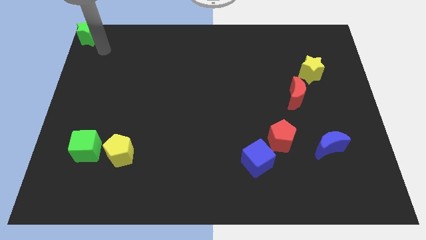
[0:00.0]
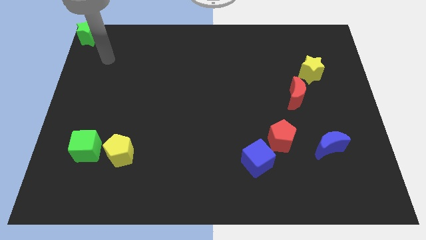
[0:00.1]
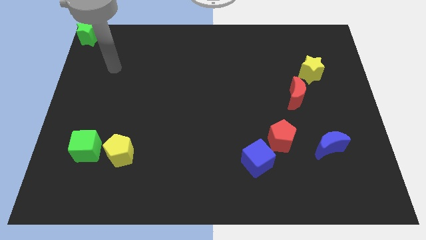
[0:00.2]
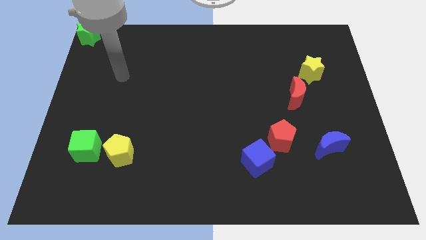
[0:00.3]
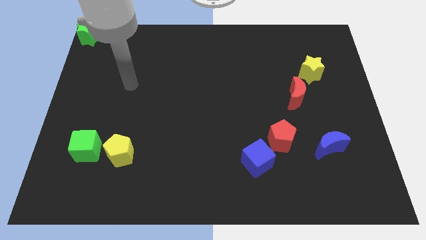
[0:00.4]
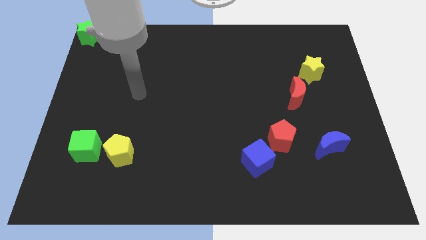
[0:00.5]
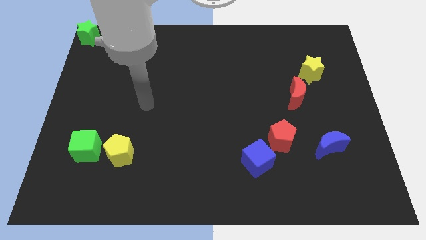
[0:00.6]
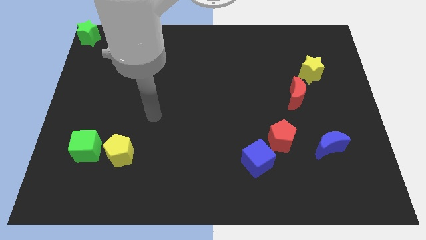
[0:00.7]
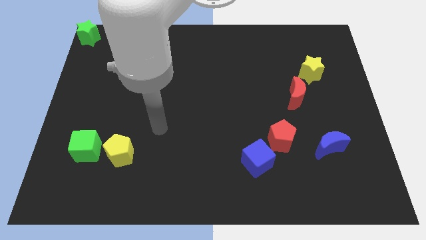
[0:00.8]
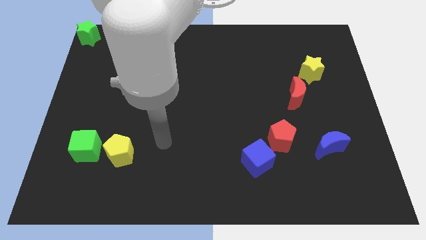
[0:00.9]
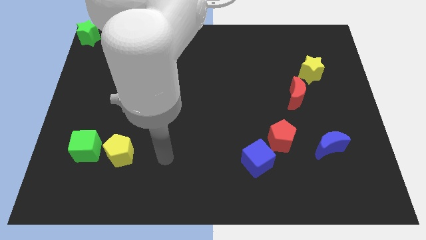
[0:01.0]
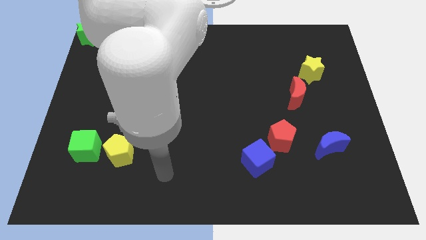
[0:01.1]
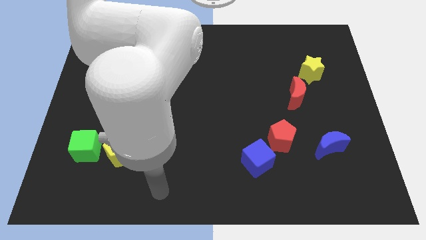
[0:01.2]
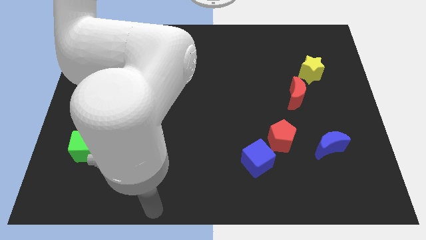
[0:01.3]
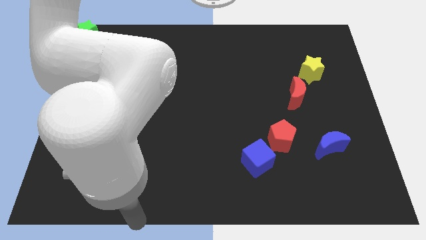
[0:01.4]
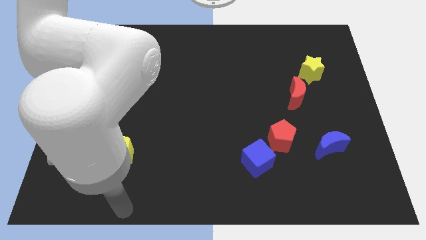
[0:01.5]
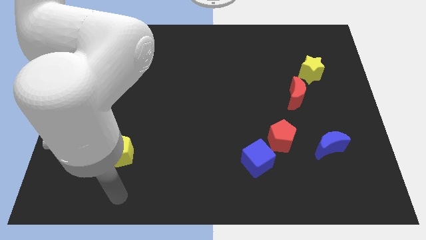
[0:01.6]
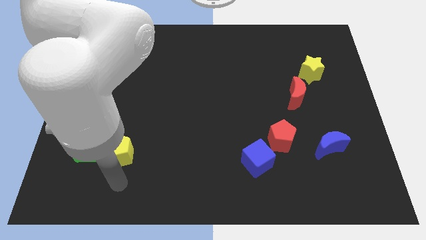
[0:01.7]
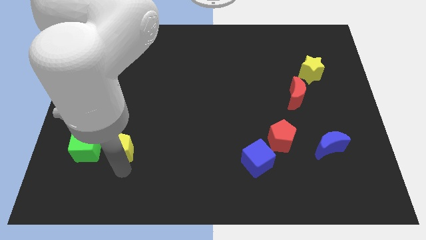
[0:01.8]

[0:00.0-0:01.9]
point your arm to the bottom of the yellow pentagon

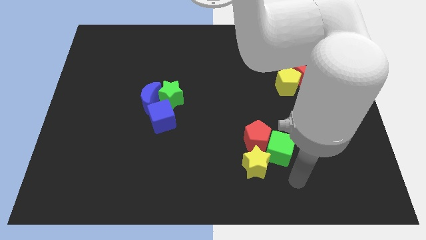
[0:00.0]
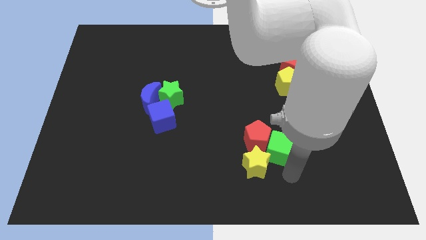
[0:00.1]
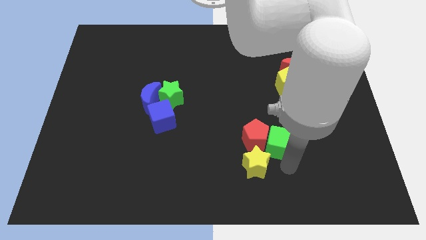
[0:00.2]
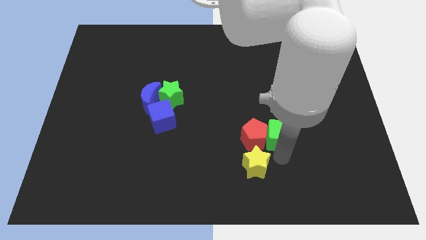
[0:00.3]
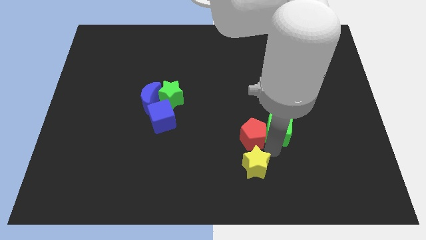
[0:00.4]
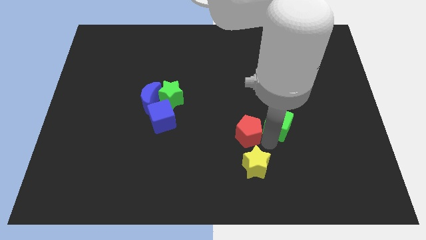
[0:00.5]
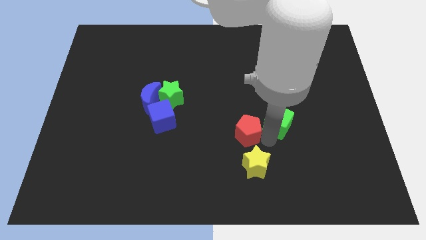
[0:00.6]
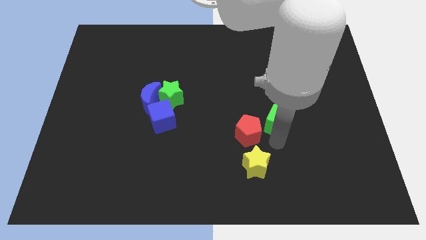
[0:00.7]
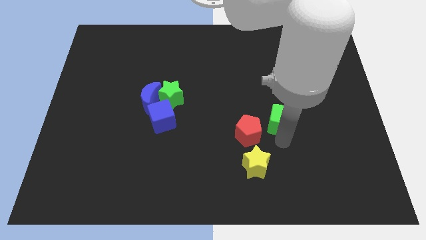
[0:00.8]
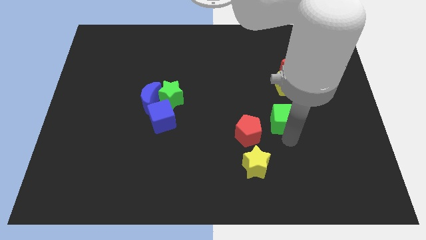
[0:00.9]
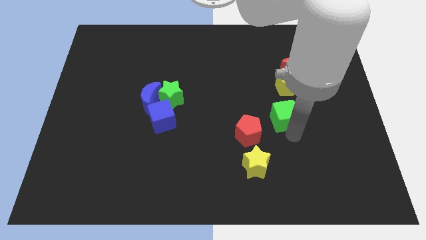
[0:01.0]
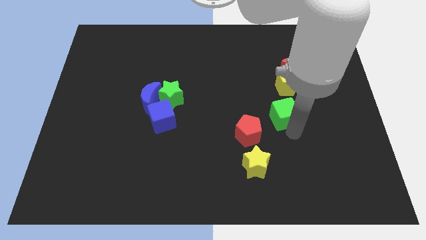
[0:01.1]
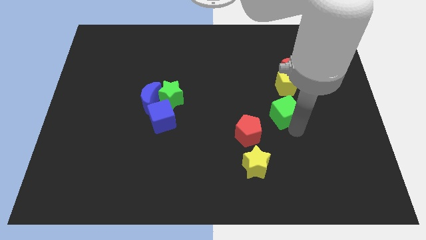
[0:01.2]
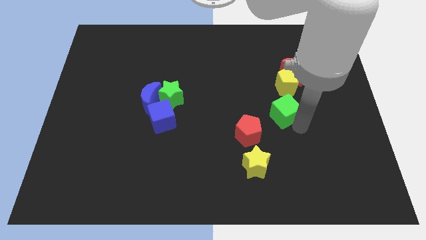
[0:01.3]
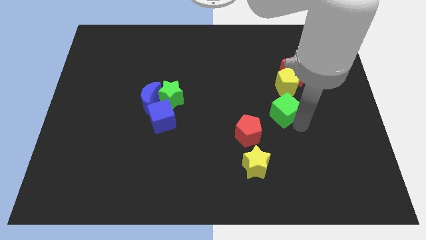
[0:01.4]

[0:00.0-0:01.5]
move the green cube below the yellow pentagon

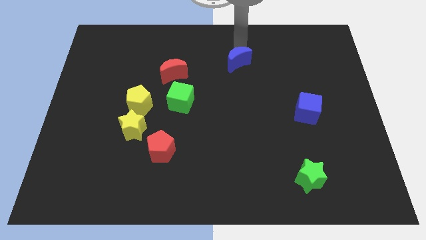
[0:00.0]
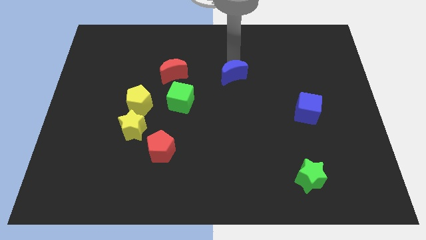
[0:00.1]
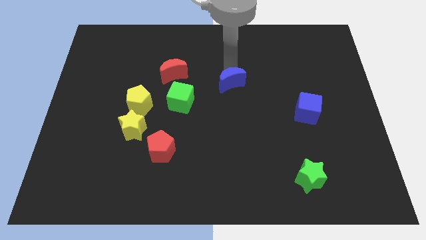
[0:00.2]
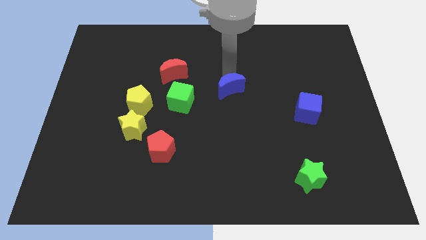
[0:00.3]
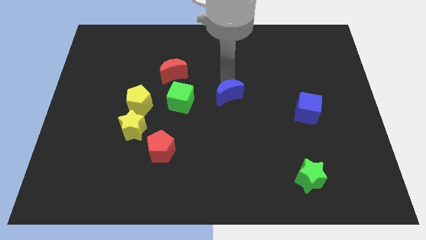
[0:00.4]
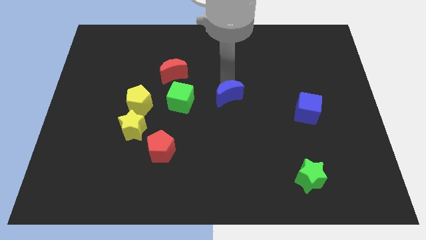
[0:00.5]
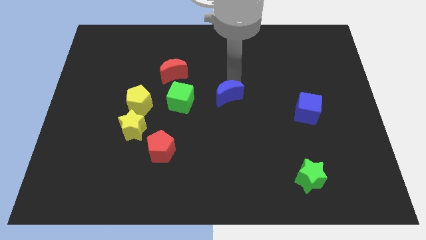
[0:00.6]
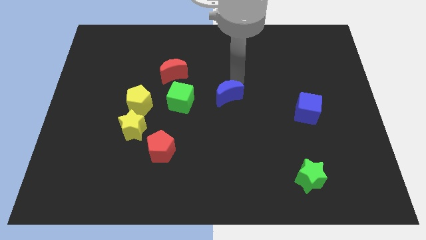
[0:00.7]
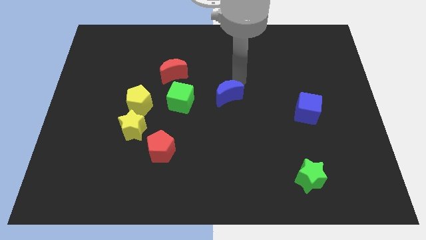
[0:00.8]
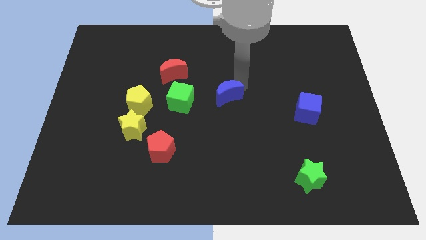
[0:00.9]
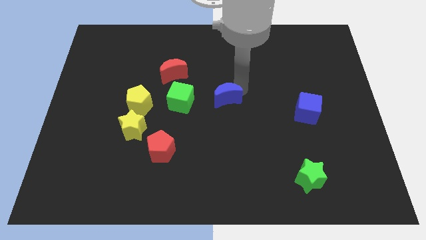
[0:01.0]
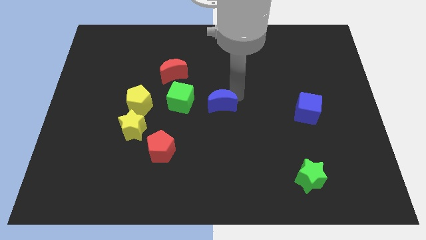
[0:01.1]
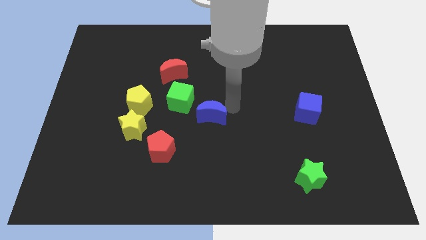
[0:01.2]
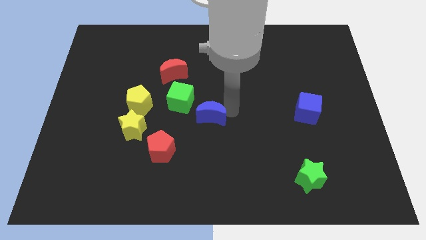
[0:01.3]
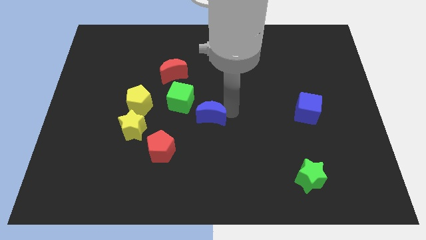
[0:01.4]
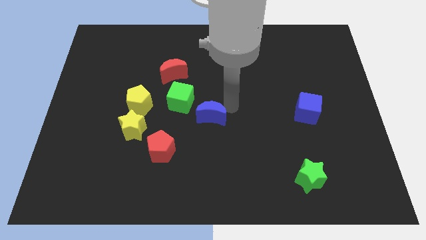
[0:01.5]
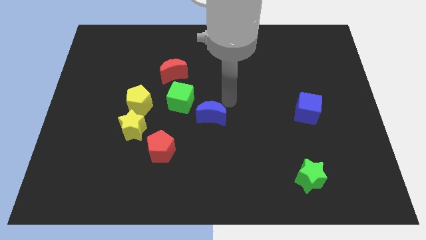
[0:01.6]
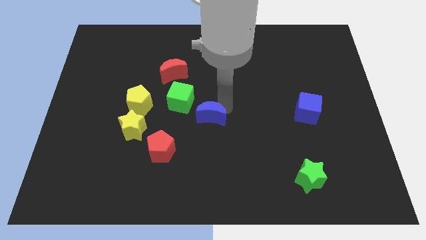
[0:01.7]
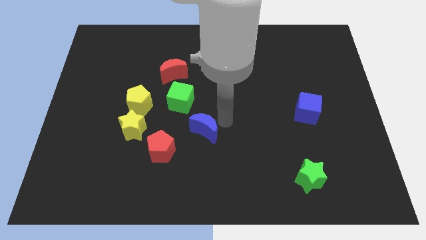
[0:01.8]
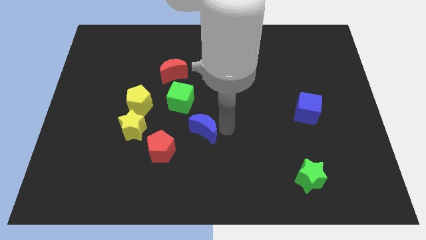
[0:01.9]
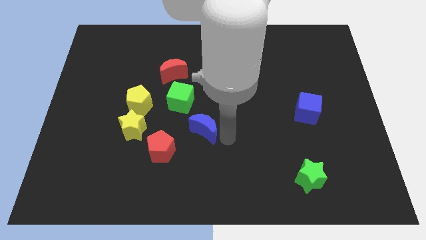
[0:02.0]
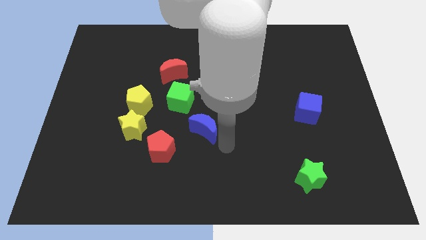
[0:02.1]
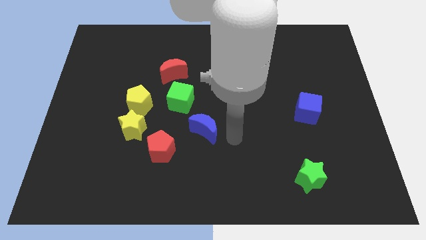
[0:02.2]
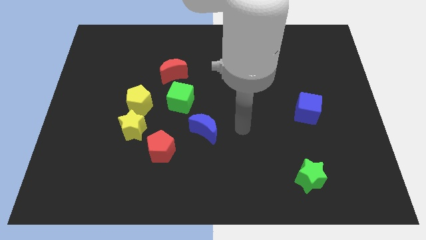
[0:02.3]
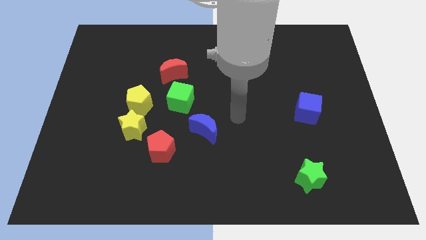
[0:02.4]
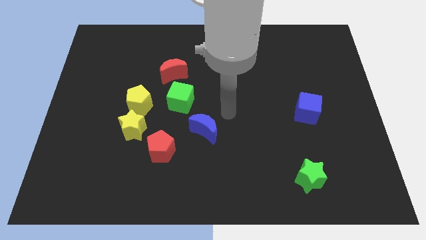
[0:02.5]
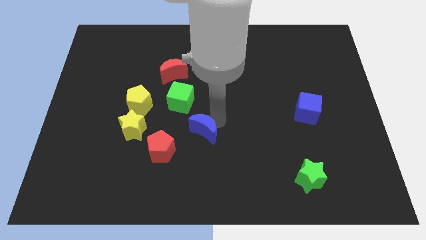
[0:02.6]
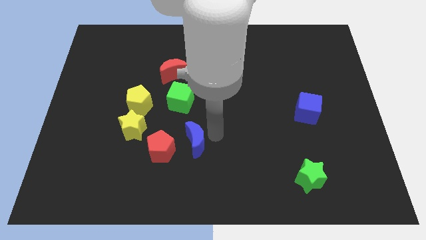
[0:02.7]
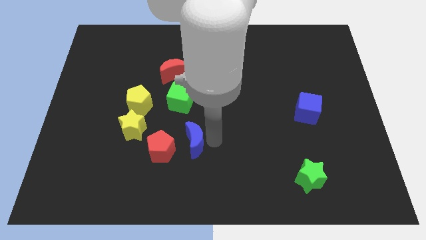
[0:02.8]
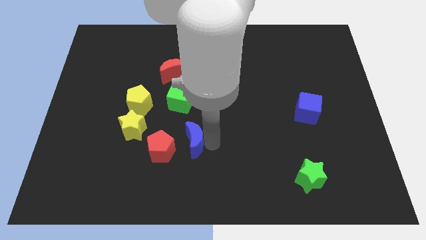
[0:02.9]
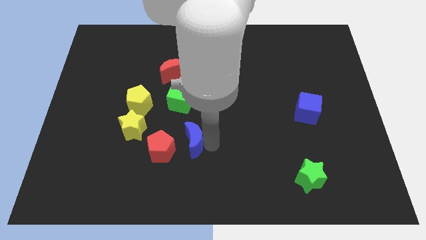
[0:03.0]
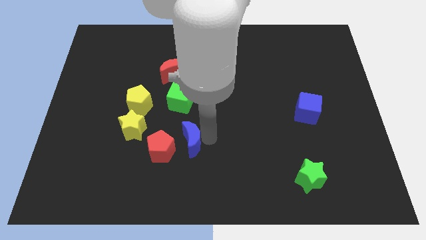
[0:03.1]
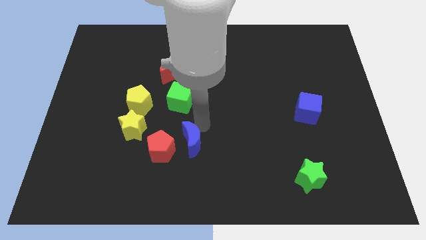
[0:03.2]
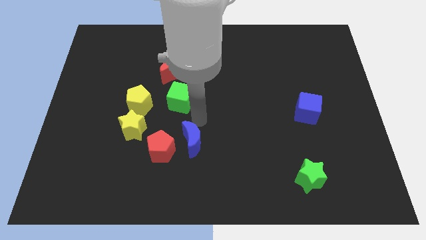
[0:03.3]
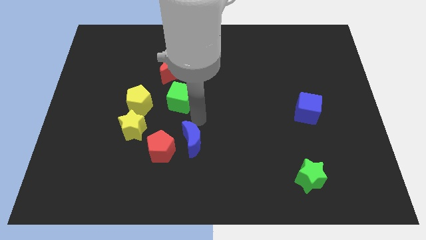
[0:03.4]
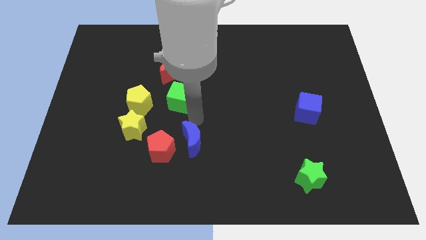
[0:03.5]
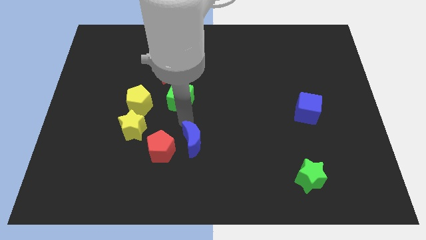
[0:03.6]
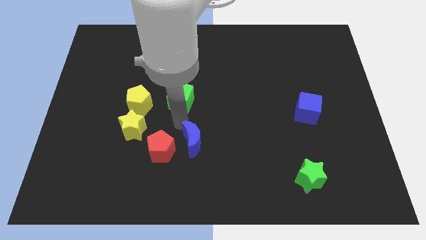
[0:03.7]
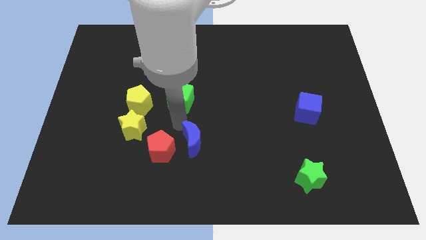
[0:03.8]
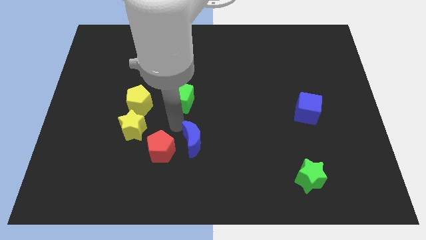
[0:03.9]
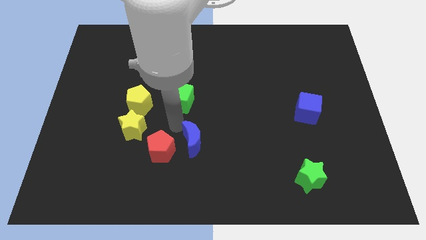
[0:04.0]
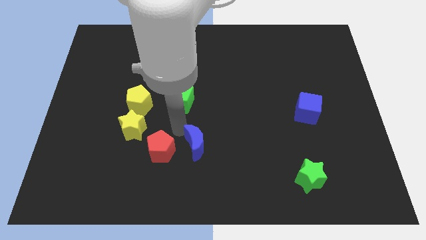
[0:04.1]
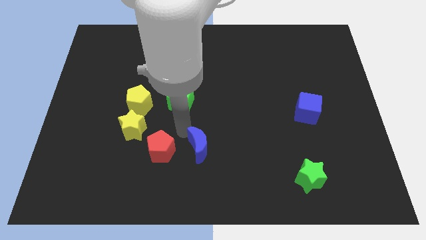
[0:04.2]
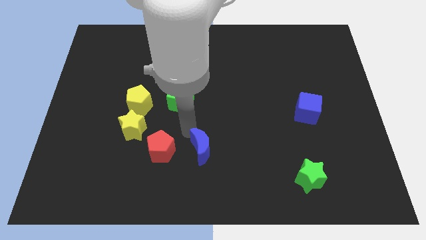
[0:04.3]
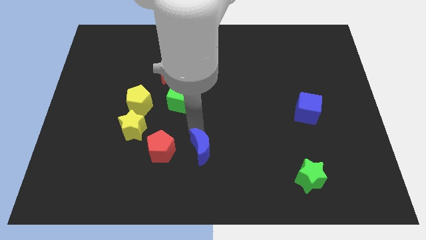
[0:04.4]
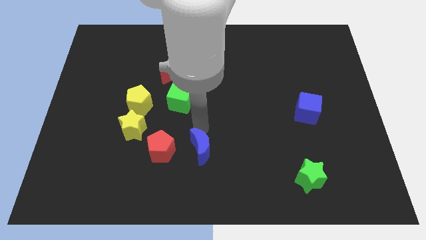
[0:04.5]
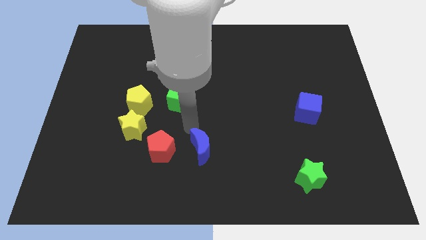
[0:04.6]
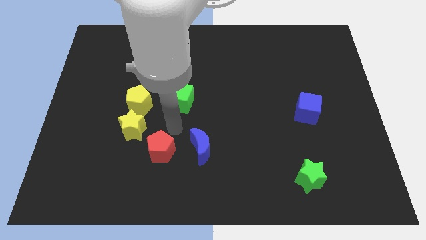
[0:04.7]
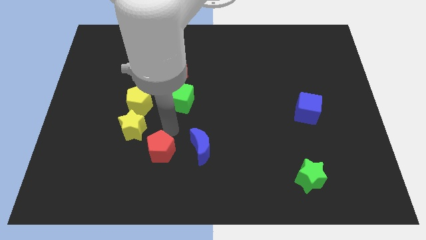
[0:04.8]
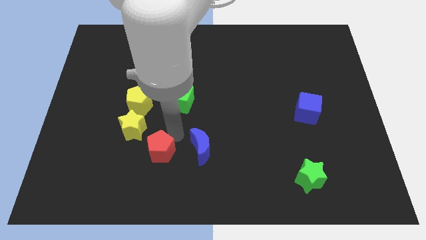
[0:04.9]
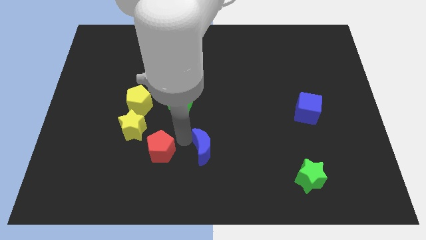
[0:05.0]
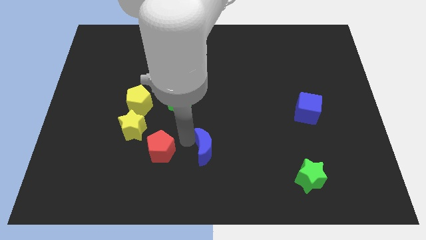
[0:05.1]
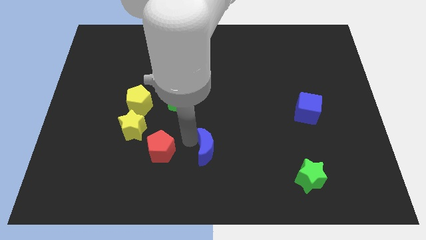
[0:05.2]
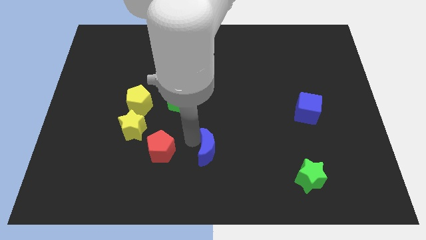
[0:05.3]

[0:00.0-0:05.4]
slide the blue moon towards the bottom center
